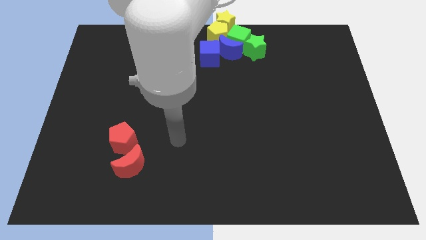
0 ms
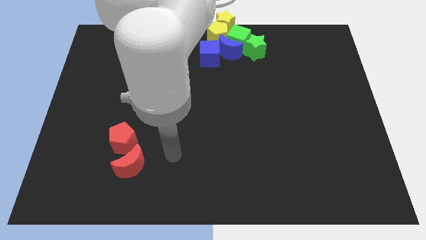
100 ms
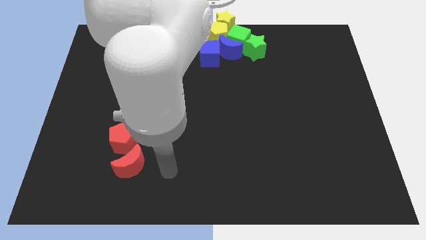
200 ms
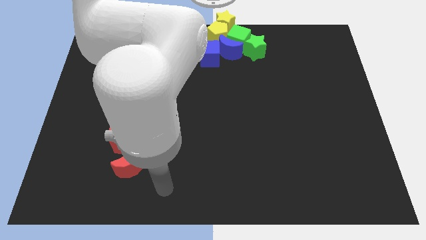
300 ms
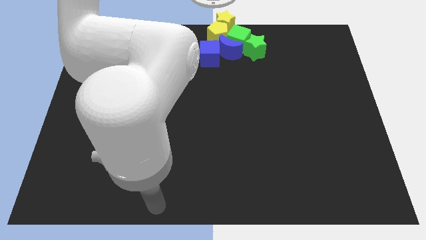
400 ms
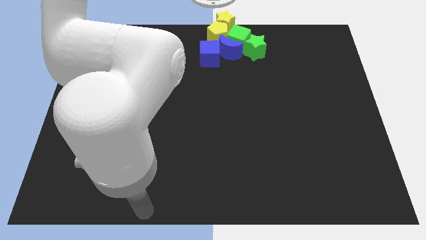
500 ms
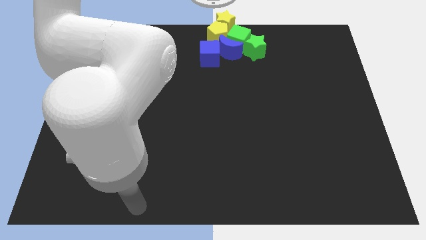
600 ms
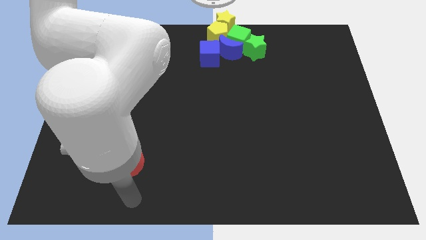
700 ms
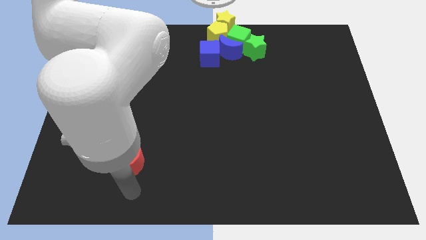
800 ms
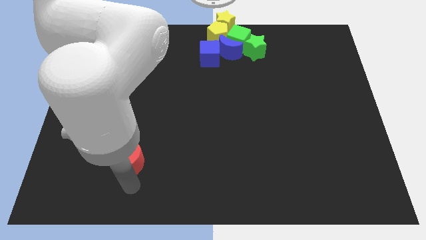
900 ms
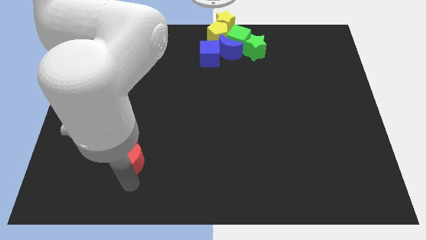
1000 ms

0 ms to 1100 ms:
point your arm below the red crescent

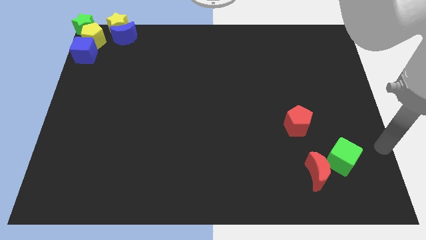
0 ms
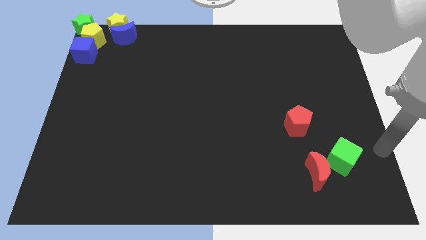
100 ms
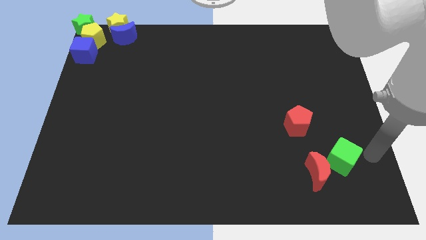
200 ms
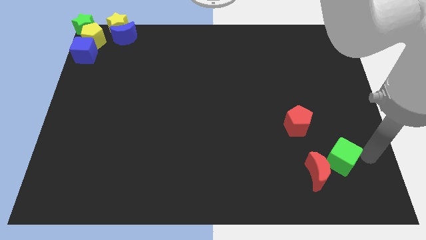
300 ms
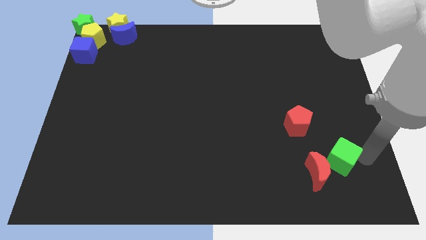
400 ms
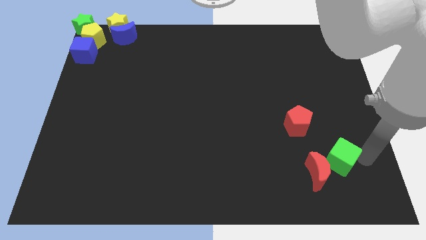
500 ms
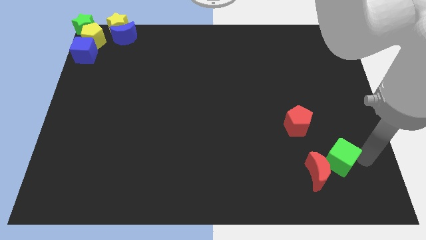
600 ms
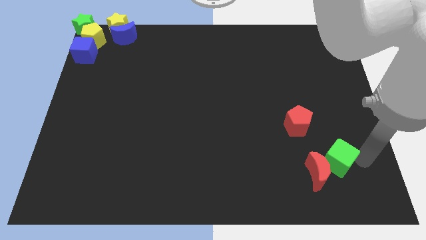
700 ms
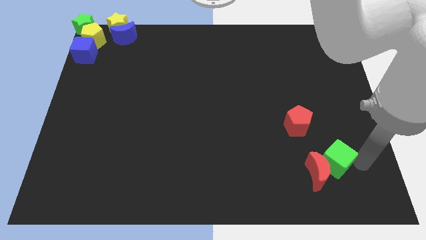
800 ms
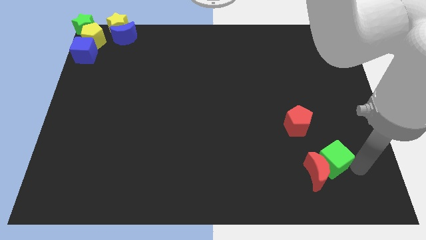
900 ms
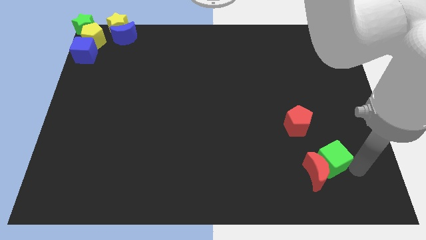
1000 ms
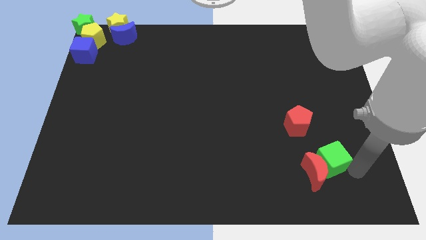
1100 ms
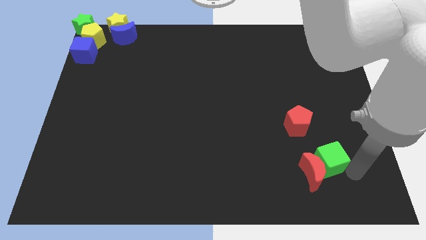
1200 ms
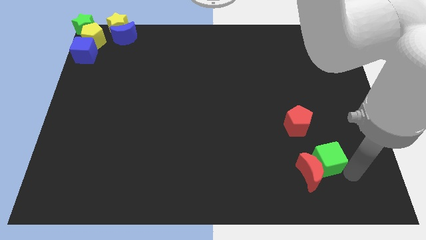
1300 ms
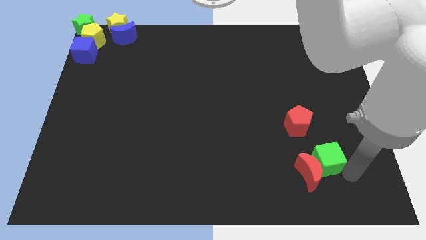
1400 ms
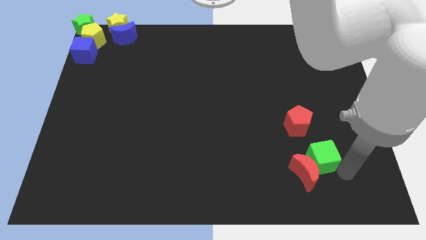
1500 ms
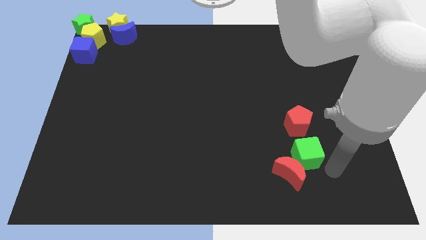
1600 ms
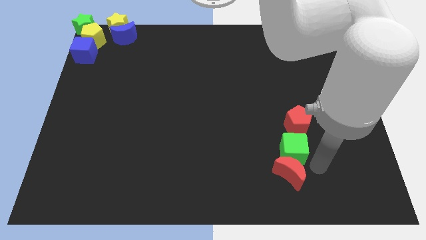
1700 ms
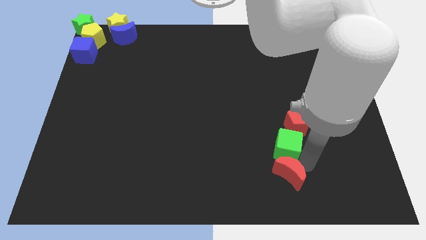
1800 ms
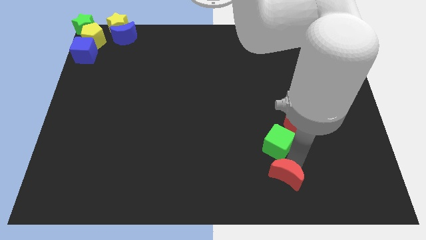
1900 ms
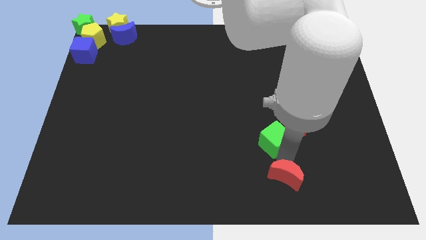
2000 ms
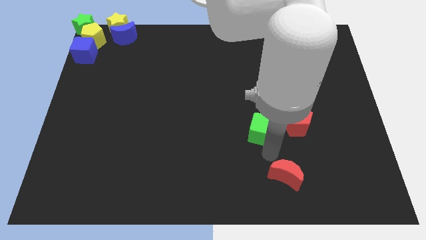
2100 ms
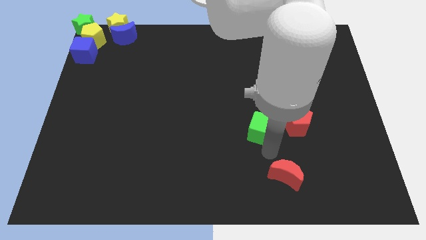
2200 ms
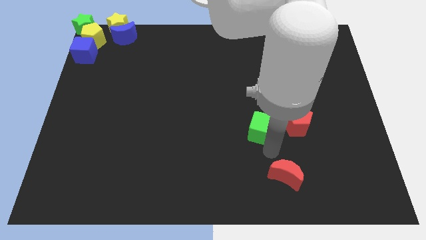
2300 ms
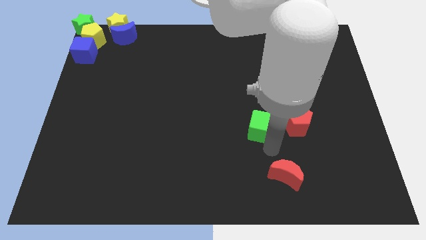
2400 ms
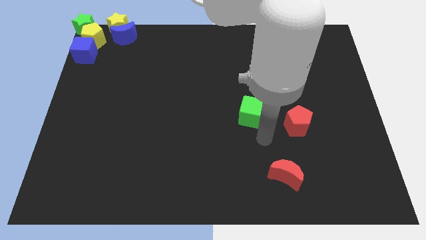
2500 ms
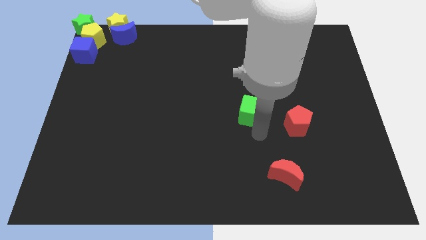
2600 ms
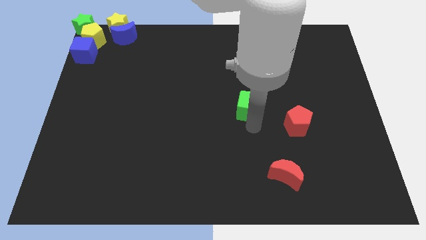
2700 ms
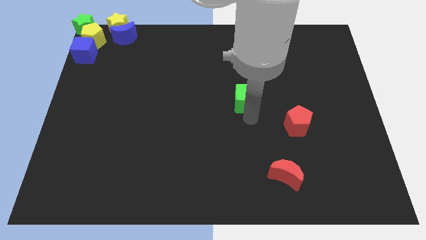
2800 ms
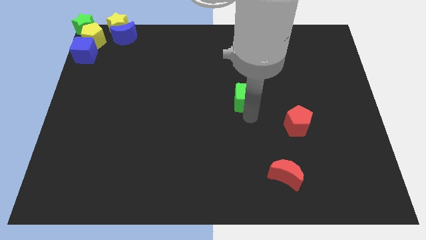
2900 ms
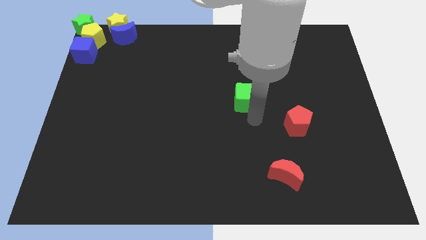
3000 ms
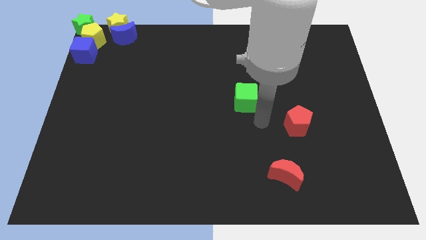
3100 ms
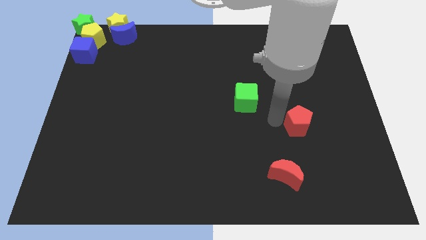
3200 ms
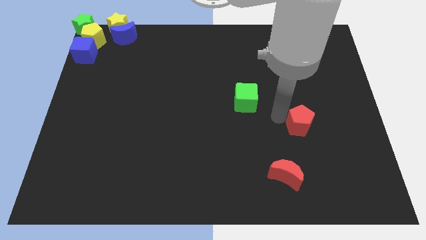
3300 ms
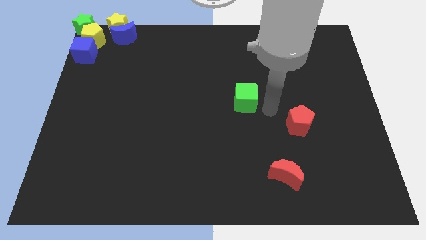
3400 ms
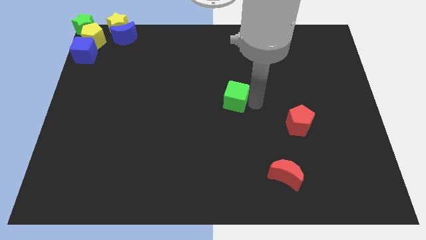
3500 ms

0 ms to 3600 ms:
place green cube to the center of the board

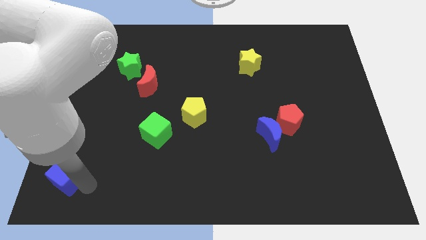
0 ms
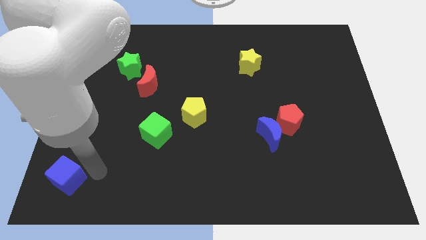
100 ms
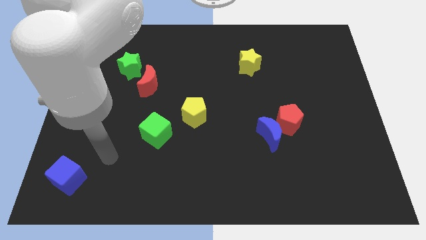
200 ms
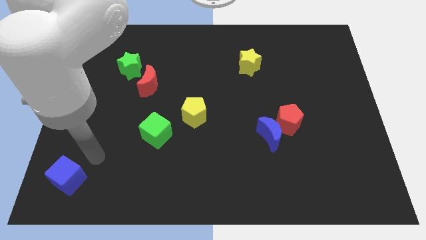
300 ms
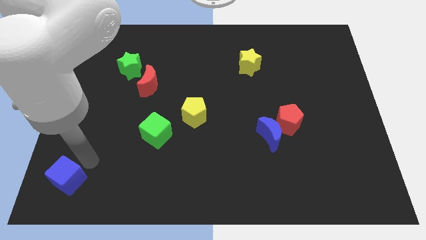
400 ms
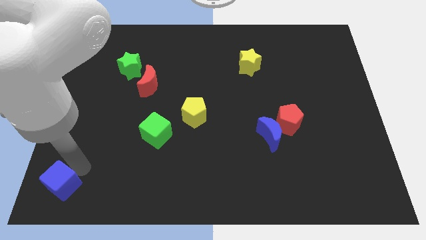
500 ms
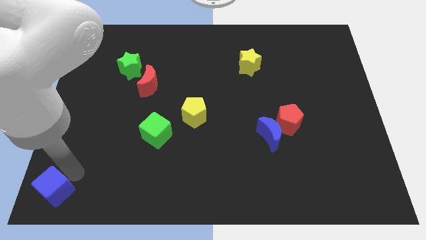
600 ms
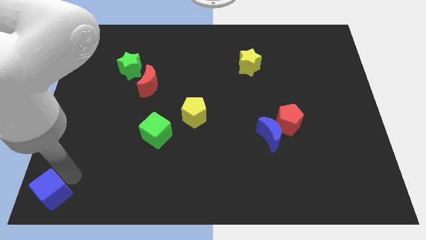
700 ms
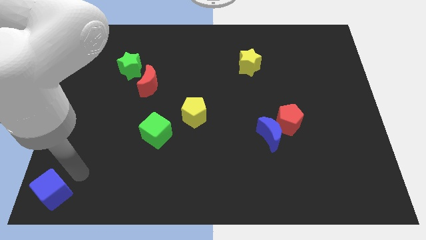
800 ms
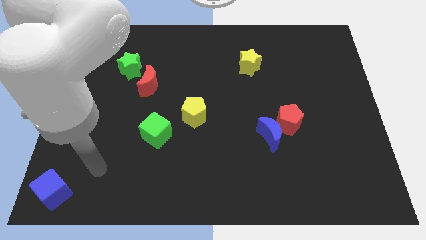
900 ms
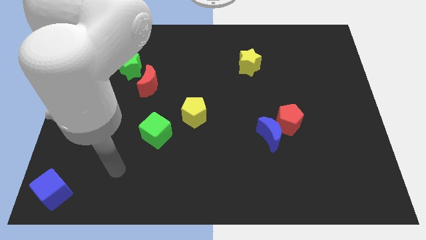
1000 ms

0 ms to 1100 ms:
move the blue cube towards the bottom left corner of the board

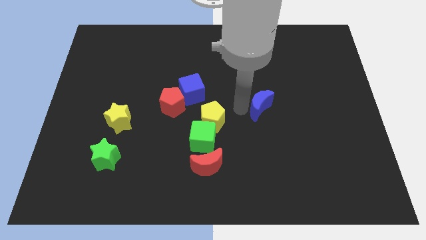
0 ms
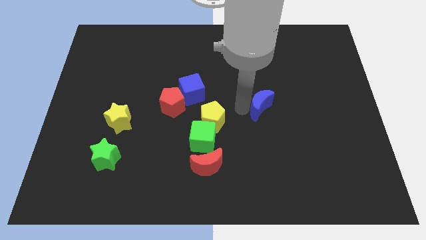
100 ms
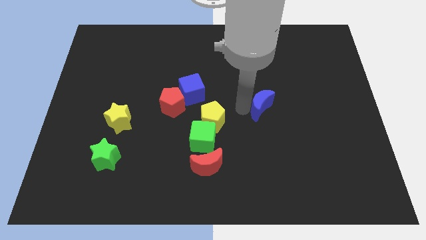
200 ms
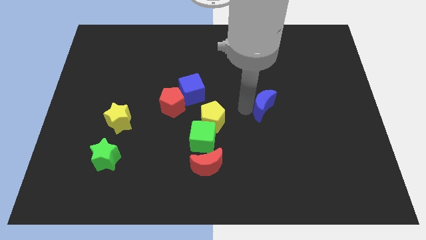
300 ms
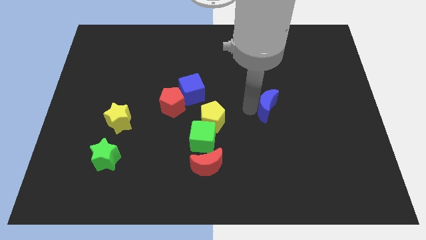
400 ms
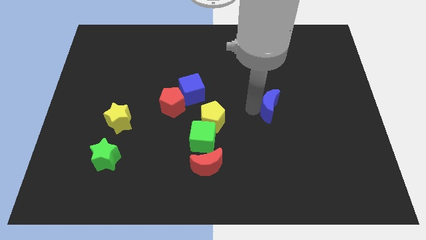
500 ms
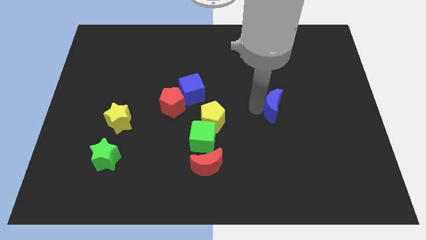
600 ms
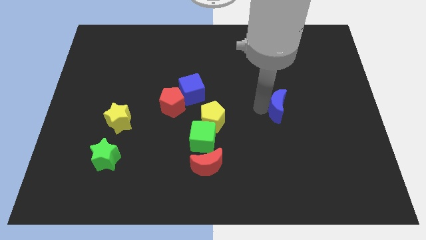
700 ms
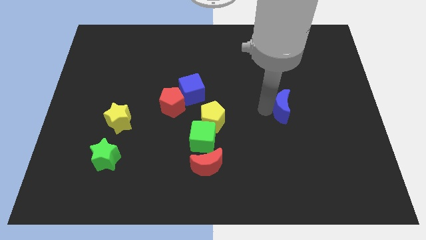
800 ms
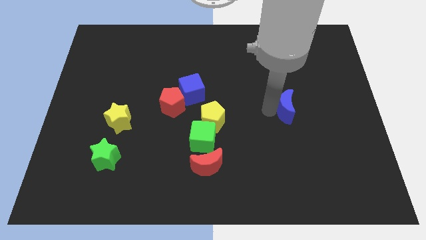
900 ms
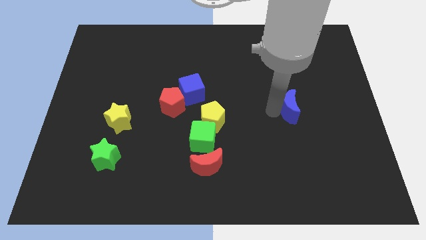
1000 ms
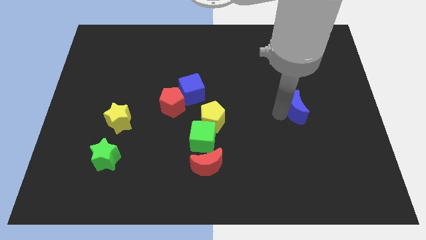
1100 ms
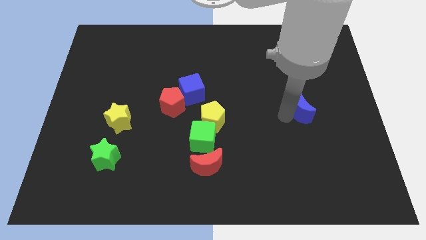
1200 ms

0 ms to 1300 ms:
slide the blue crescent slightly to the right

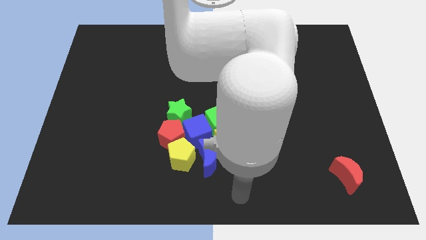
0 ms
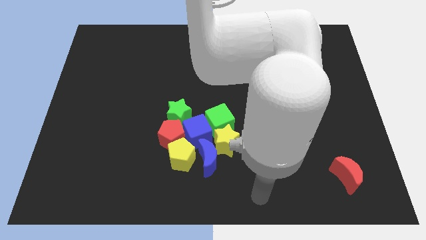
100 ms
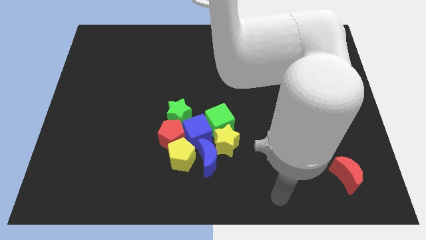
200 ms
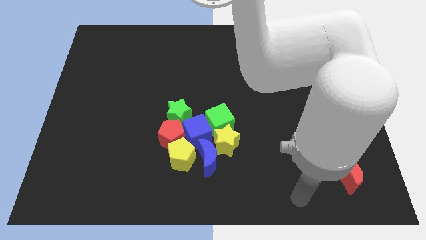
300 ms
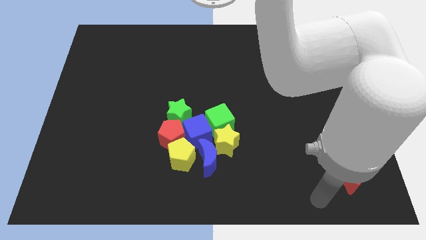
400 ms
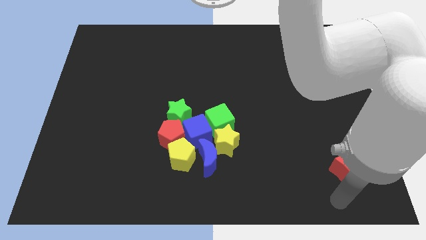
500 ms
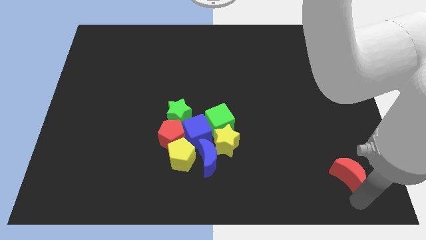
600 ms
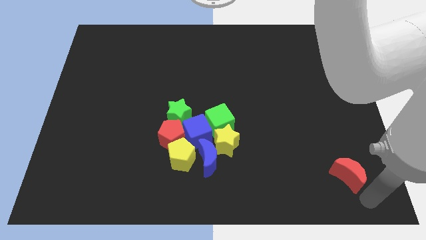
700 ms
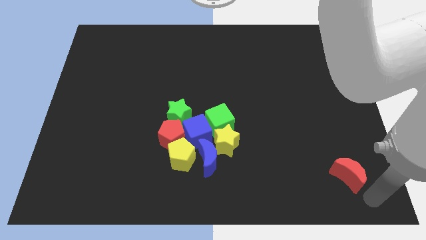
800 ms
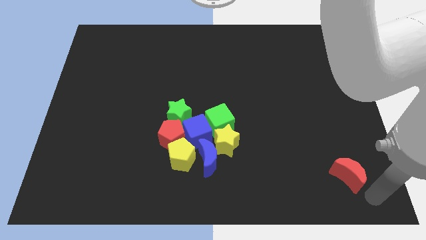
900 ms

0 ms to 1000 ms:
move your arm at the bottom right of the red moon

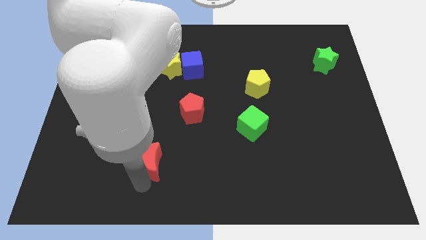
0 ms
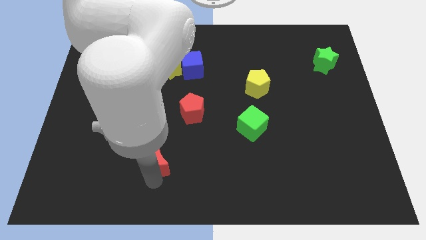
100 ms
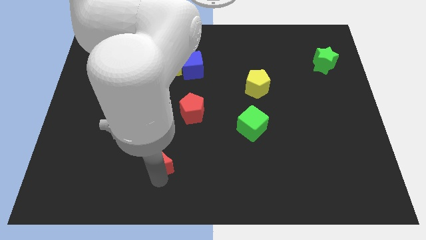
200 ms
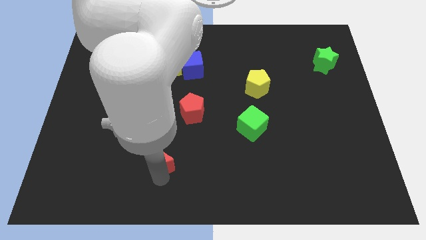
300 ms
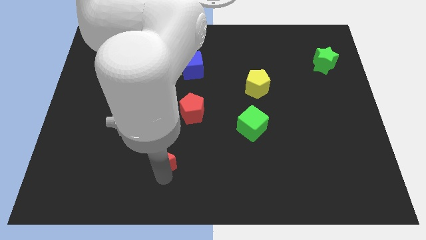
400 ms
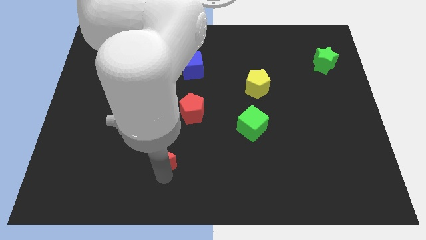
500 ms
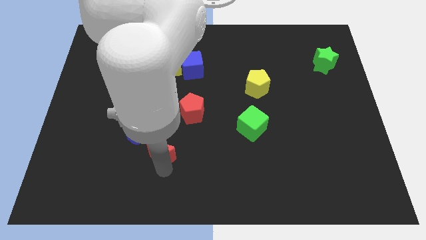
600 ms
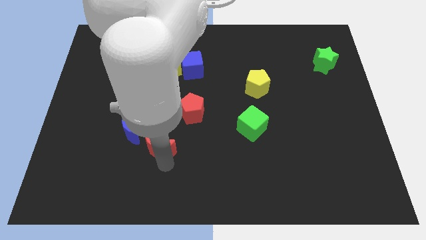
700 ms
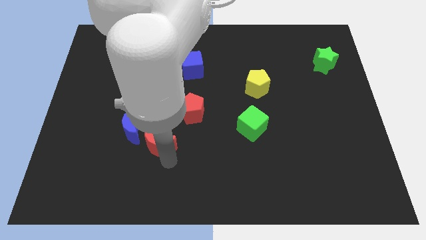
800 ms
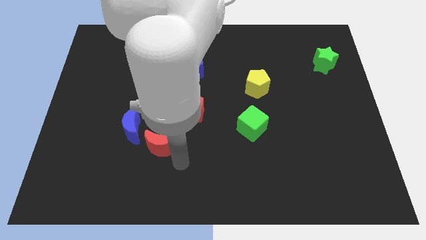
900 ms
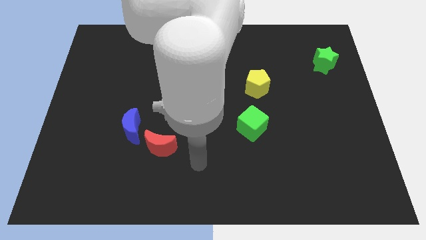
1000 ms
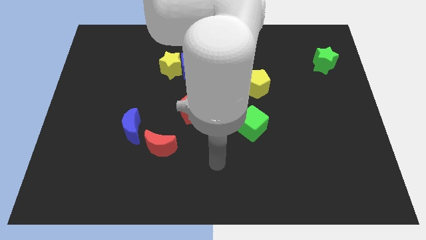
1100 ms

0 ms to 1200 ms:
move the red crescent to the bottom right side of the blue moon
